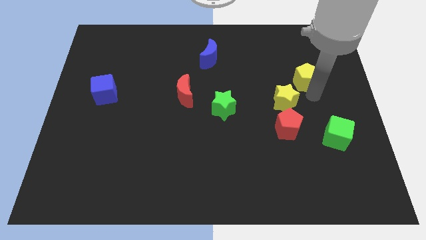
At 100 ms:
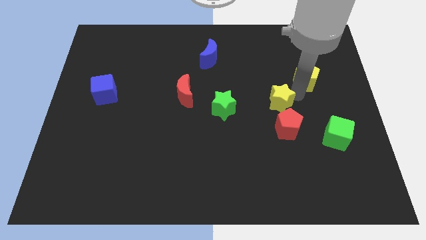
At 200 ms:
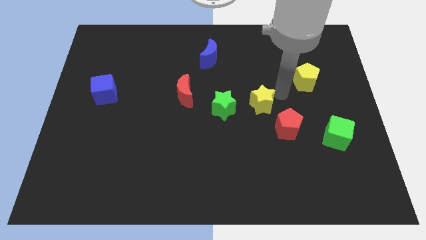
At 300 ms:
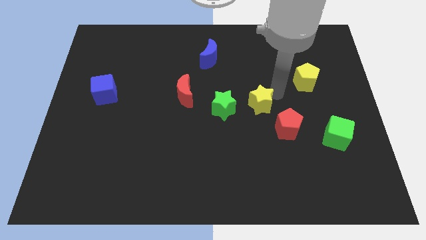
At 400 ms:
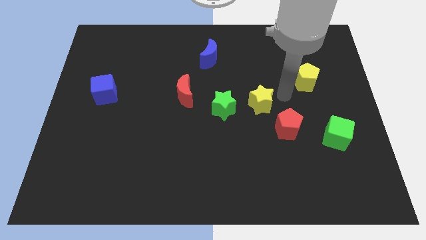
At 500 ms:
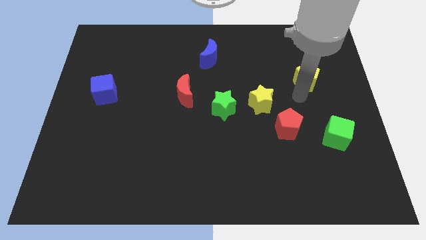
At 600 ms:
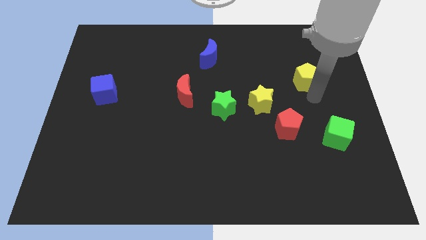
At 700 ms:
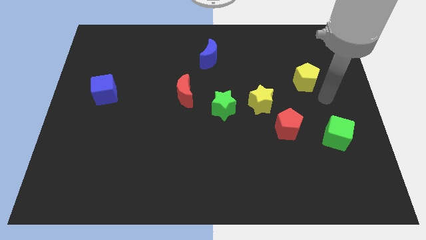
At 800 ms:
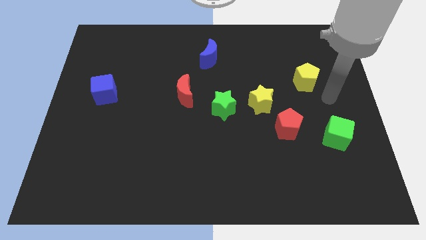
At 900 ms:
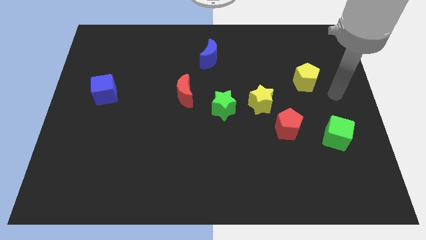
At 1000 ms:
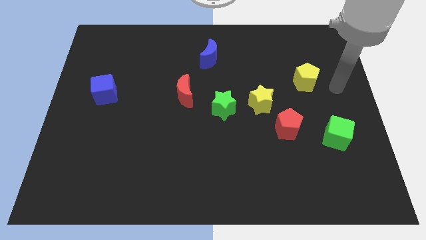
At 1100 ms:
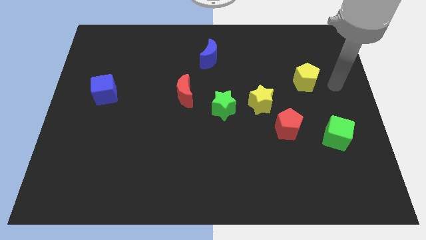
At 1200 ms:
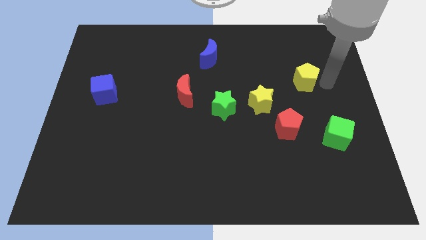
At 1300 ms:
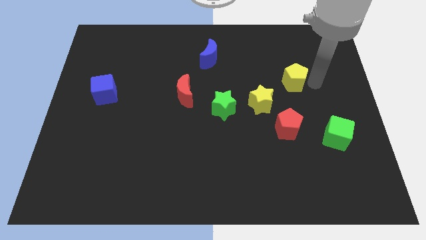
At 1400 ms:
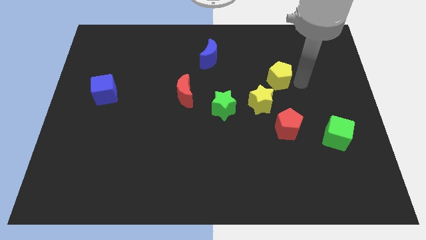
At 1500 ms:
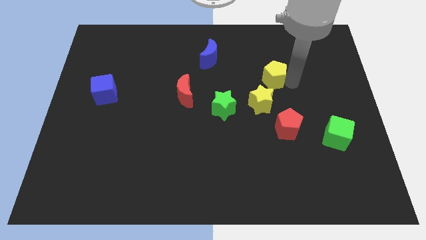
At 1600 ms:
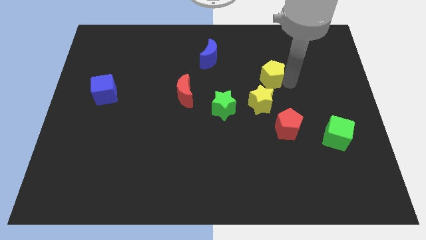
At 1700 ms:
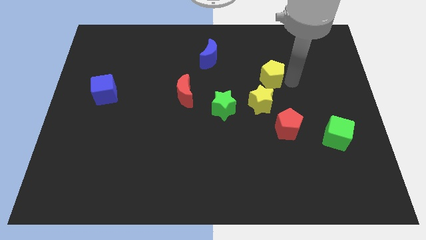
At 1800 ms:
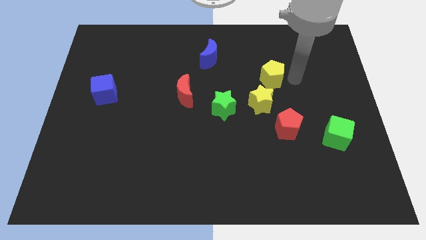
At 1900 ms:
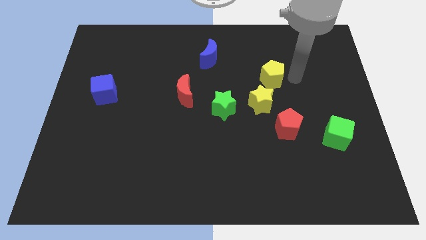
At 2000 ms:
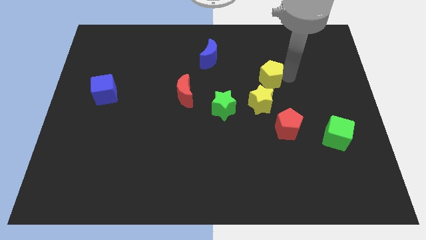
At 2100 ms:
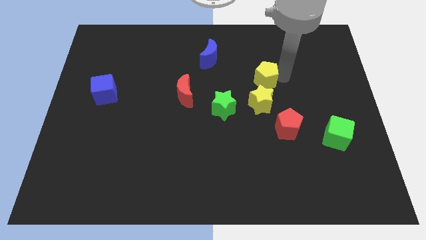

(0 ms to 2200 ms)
move the yellow pentagon above the yellow star of the board

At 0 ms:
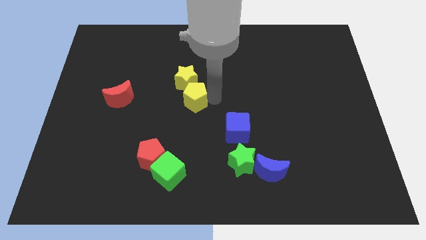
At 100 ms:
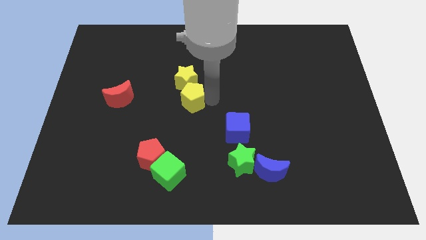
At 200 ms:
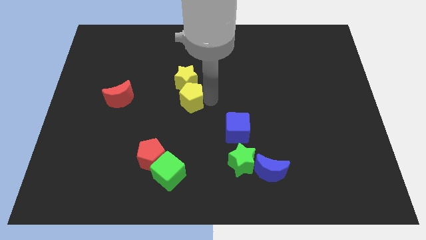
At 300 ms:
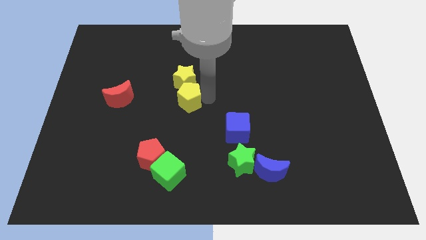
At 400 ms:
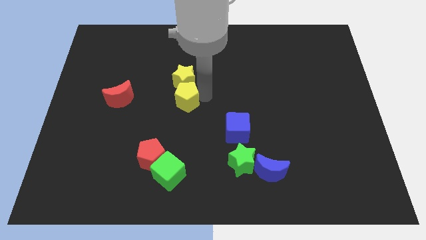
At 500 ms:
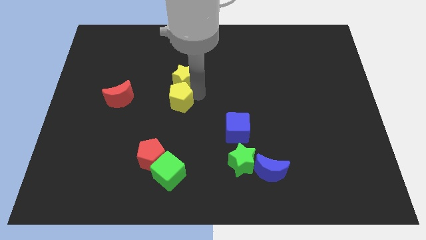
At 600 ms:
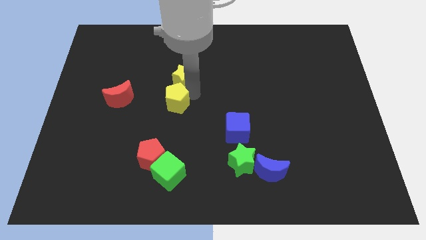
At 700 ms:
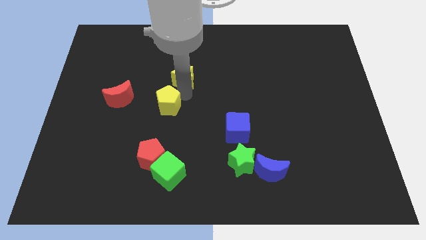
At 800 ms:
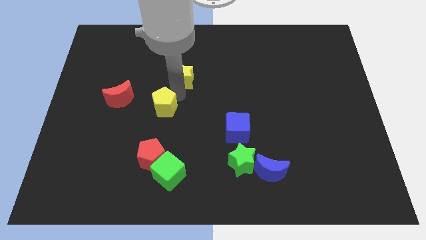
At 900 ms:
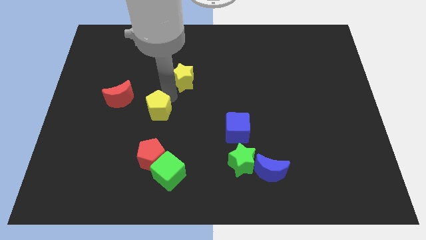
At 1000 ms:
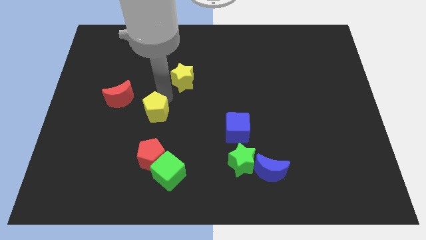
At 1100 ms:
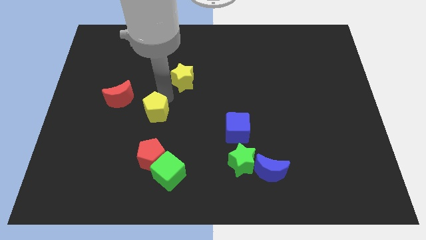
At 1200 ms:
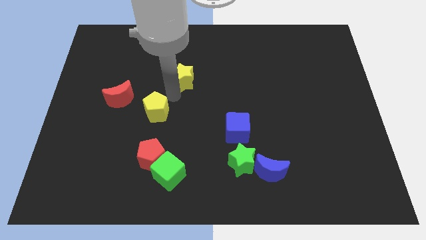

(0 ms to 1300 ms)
move yellow pentagon above the red pentagon

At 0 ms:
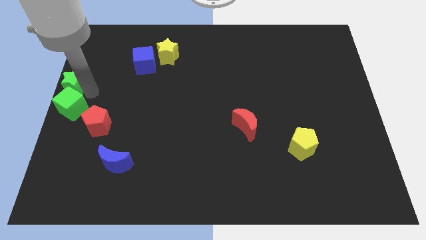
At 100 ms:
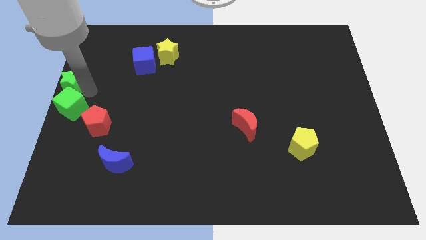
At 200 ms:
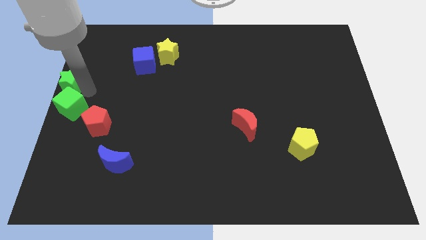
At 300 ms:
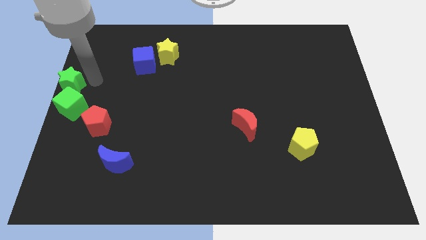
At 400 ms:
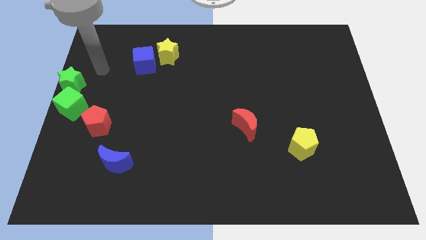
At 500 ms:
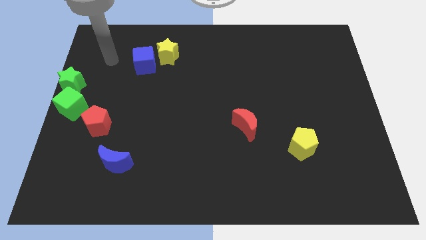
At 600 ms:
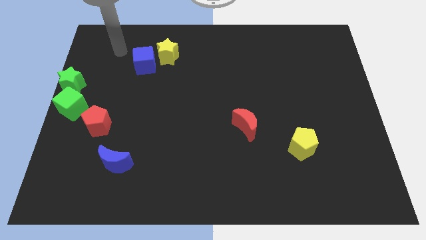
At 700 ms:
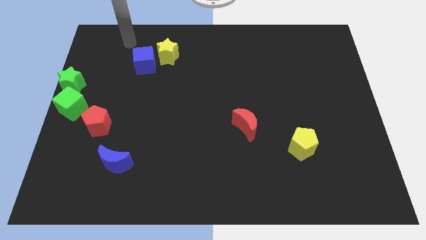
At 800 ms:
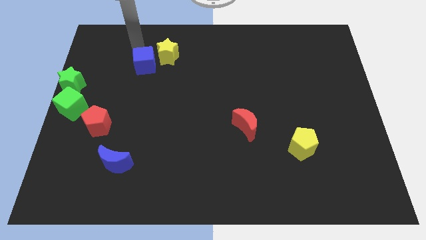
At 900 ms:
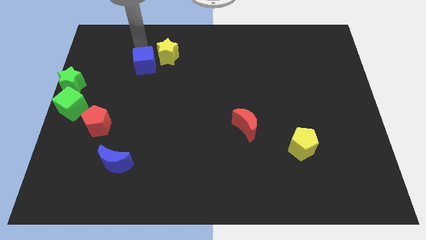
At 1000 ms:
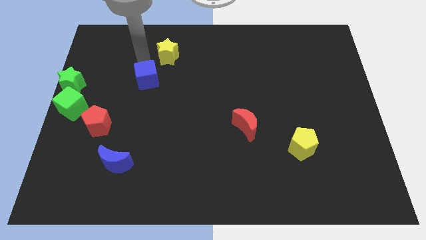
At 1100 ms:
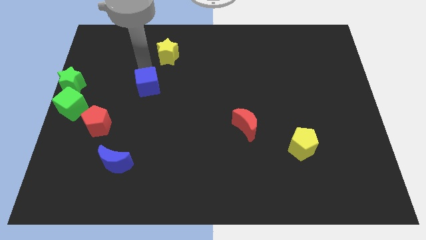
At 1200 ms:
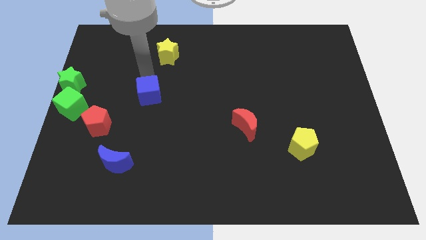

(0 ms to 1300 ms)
push the blue cube slightly down

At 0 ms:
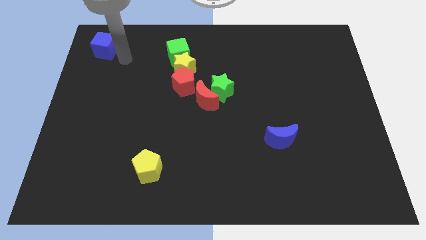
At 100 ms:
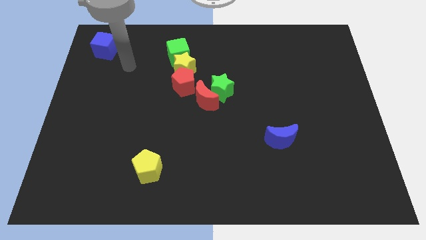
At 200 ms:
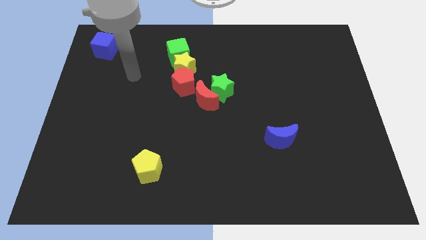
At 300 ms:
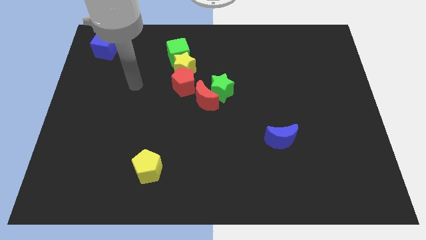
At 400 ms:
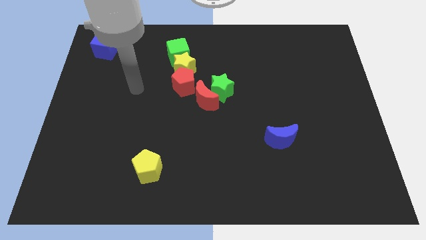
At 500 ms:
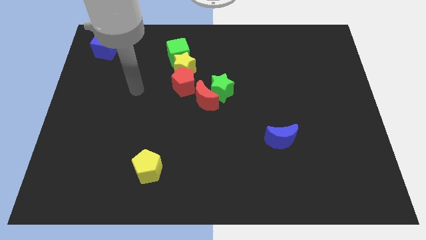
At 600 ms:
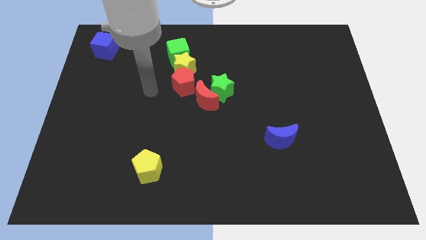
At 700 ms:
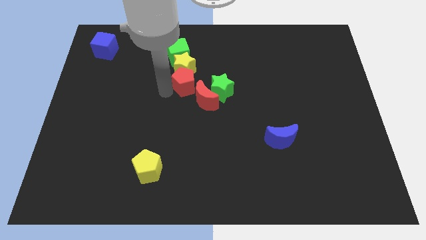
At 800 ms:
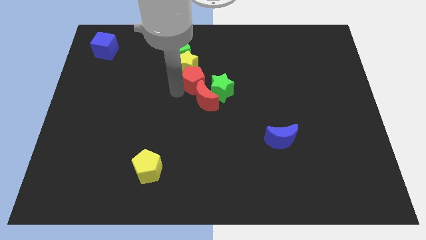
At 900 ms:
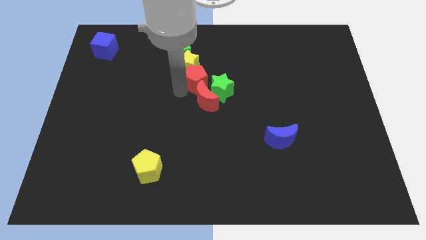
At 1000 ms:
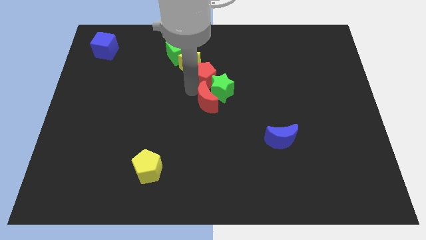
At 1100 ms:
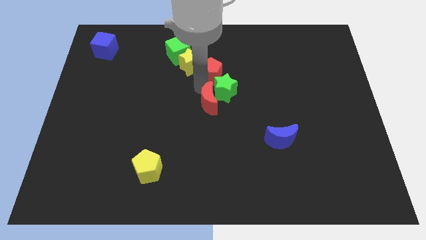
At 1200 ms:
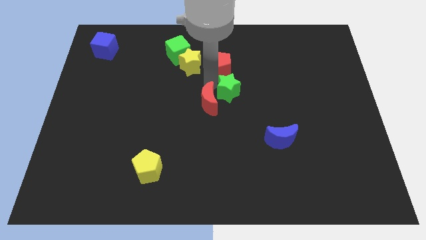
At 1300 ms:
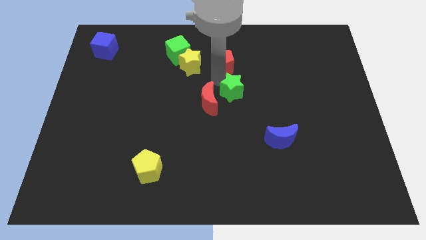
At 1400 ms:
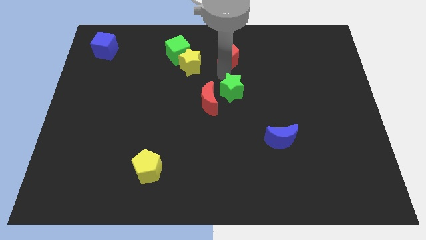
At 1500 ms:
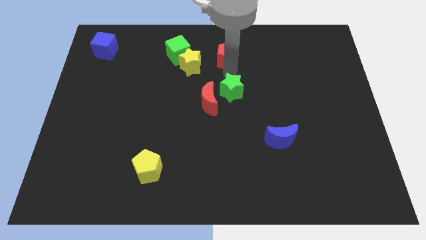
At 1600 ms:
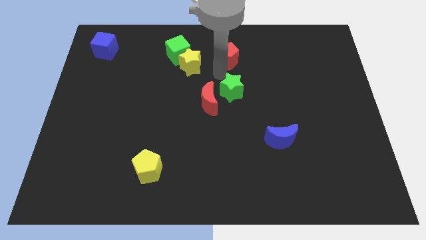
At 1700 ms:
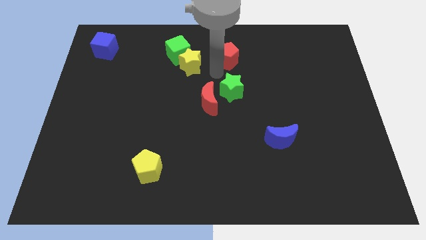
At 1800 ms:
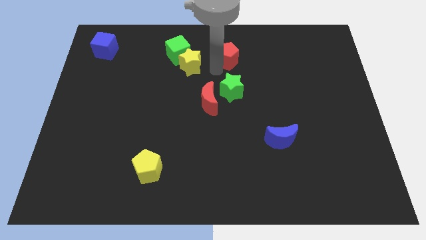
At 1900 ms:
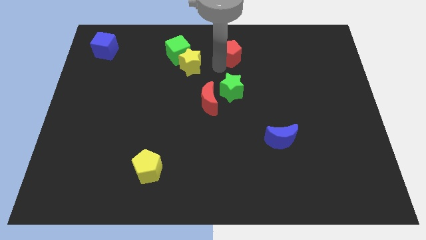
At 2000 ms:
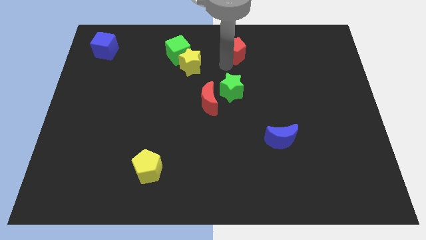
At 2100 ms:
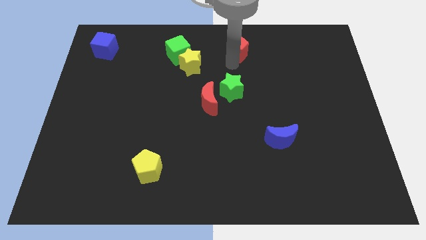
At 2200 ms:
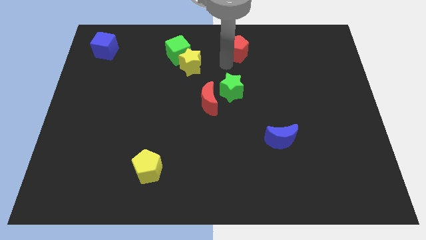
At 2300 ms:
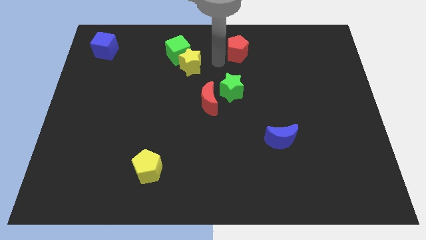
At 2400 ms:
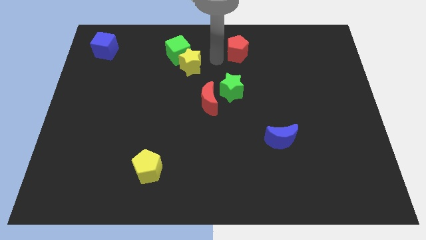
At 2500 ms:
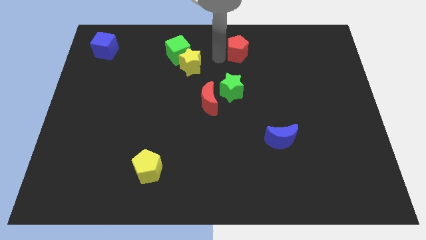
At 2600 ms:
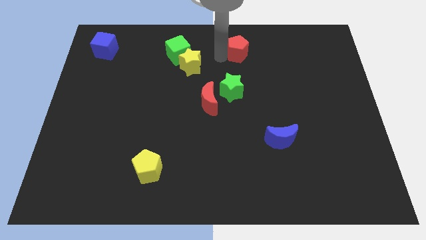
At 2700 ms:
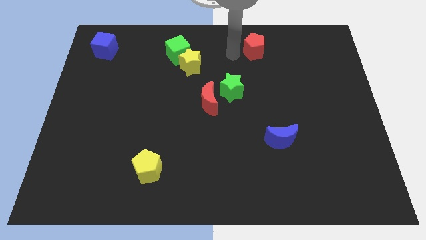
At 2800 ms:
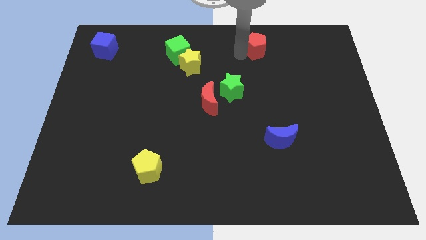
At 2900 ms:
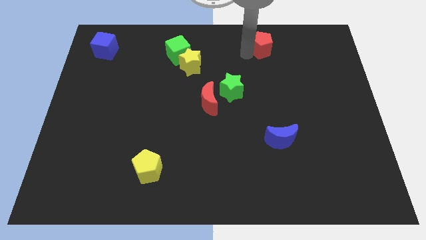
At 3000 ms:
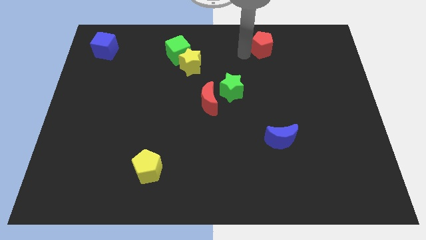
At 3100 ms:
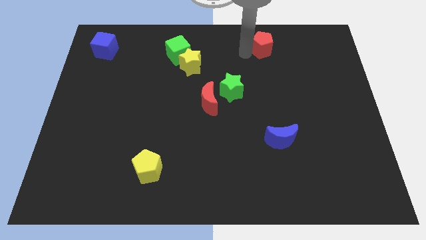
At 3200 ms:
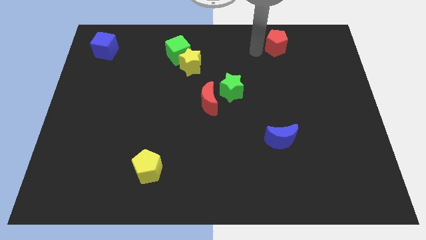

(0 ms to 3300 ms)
push the red pentagon to the top right of the green star

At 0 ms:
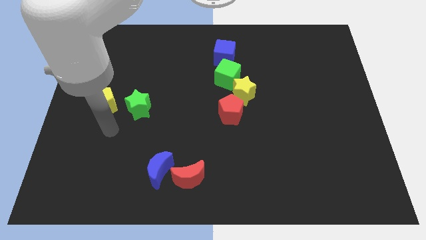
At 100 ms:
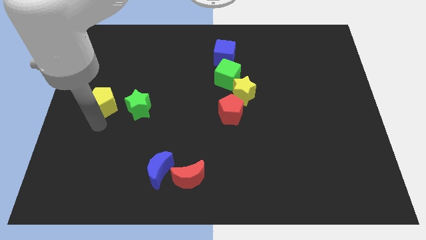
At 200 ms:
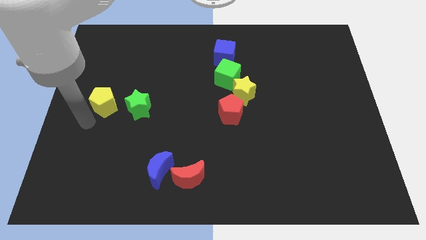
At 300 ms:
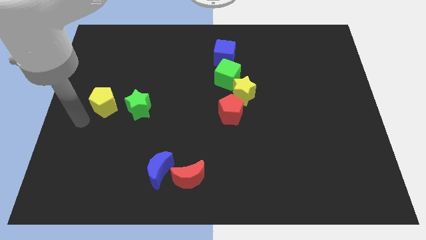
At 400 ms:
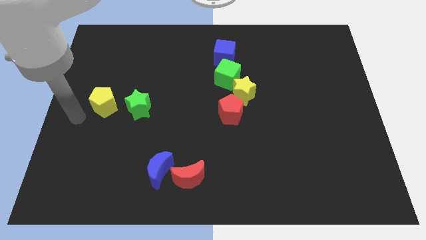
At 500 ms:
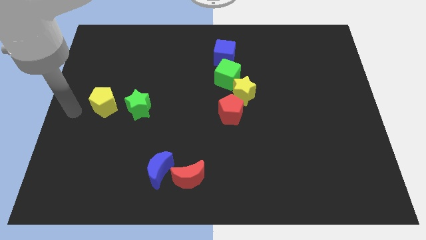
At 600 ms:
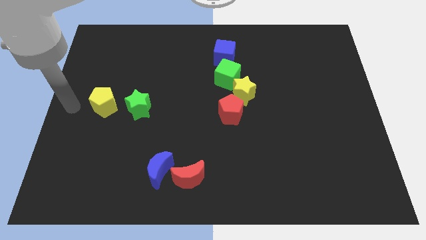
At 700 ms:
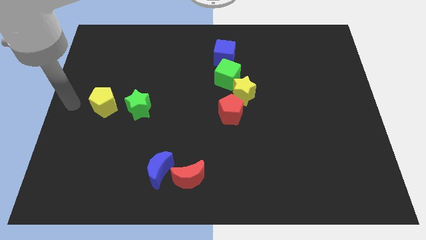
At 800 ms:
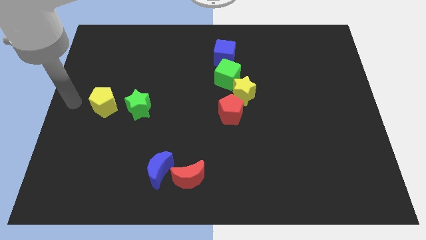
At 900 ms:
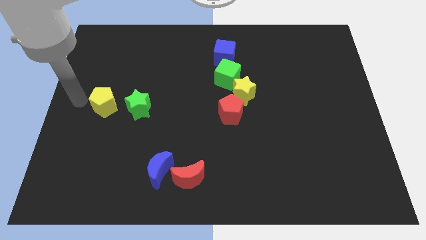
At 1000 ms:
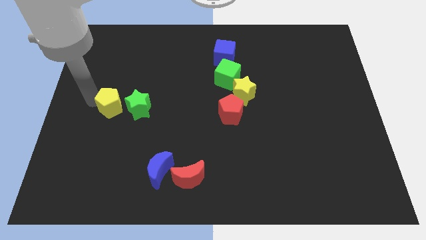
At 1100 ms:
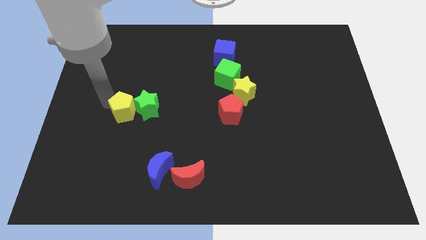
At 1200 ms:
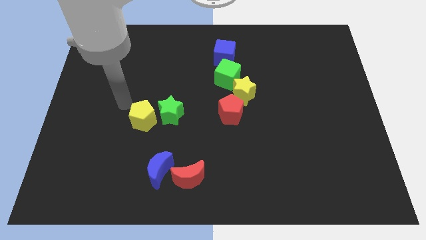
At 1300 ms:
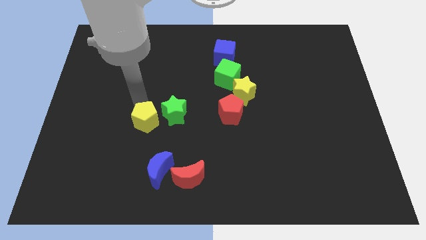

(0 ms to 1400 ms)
push the yellow pentagon and green star slightly to the right side of the board
